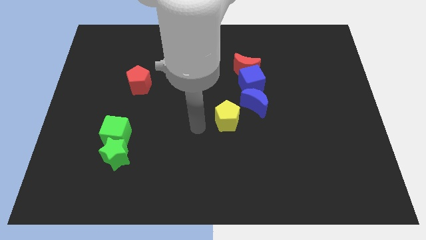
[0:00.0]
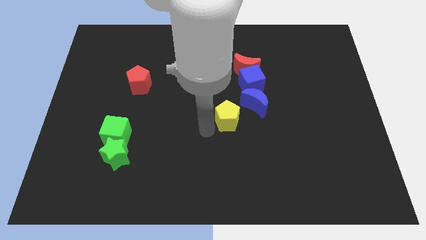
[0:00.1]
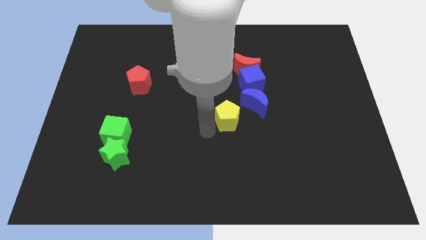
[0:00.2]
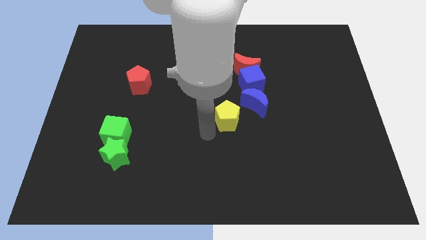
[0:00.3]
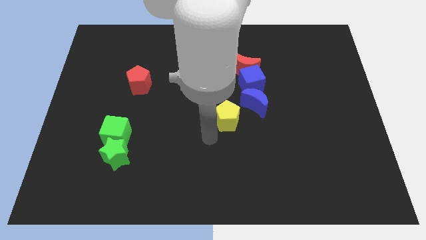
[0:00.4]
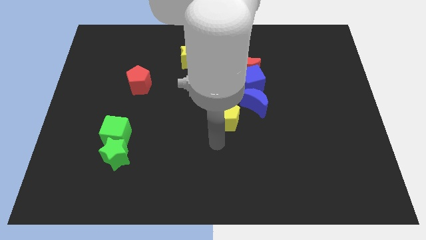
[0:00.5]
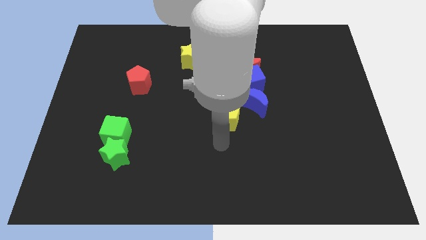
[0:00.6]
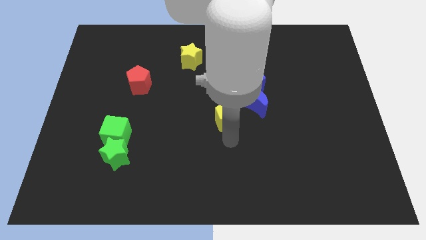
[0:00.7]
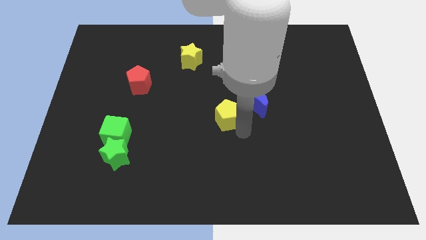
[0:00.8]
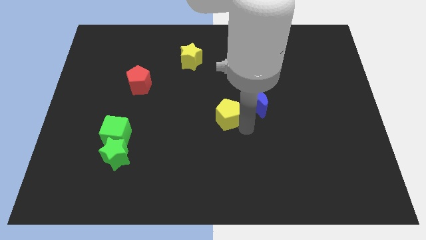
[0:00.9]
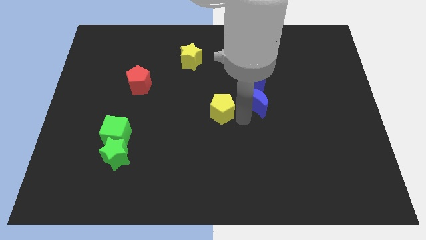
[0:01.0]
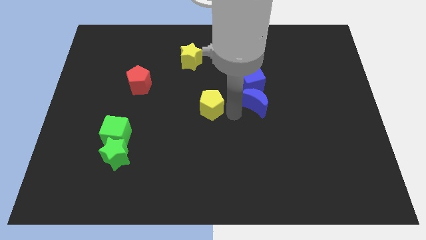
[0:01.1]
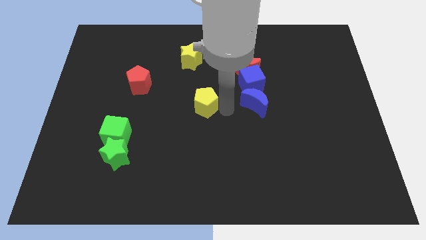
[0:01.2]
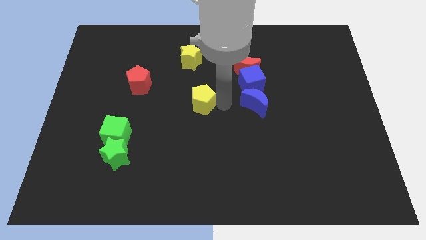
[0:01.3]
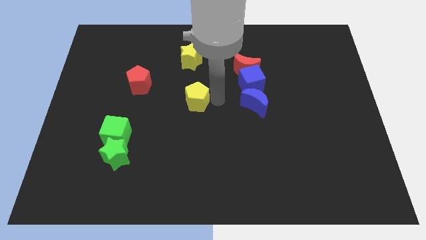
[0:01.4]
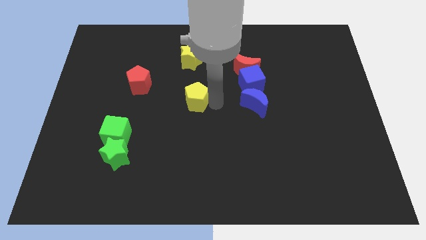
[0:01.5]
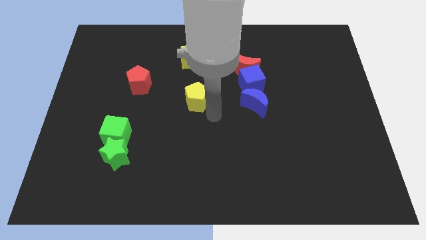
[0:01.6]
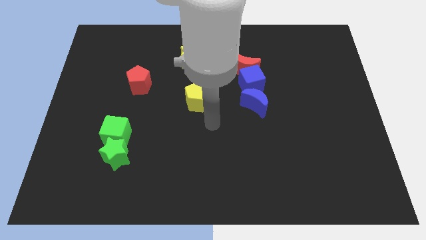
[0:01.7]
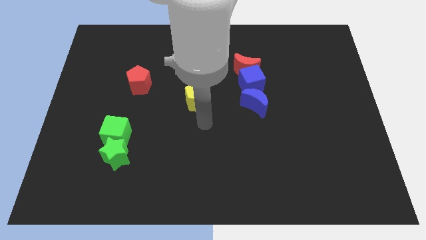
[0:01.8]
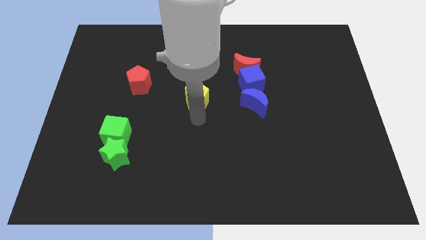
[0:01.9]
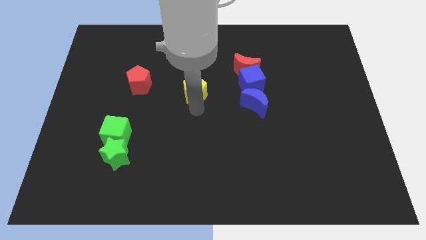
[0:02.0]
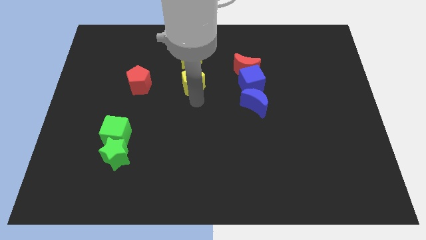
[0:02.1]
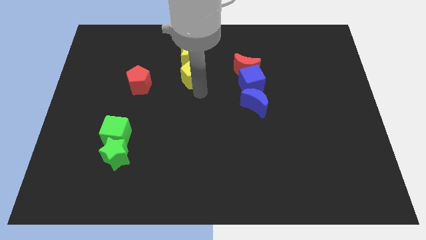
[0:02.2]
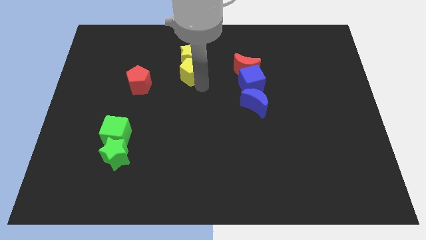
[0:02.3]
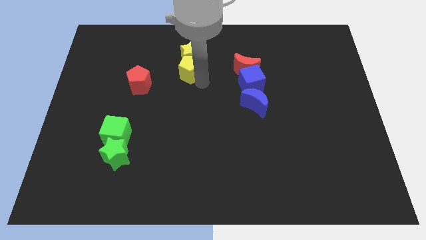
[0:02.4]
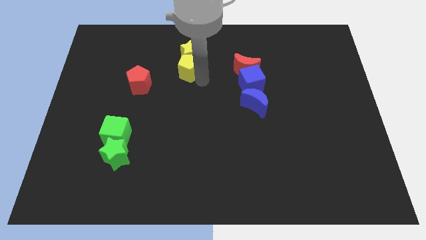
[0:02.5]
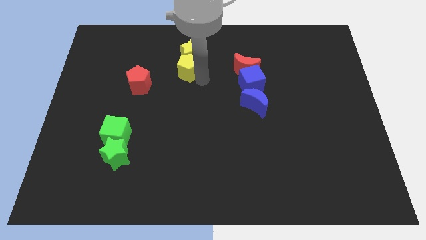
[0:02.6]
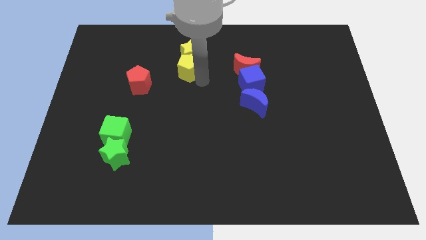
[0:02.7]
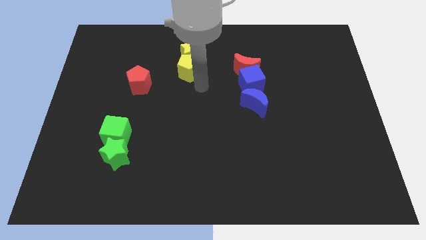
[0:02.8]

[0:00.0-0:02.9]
move yellow pentagon into the bottom of yellow star

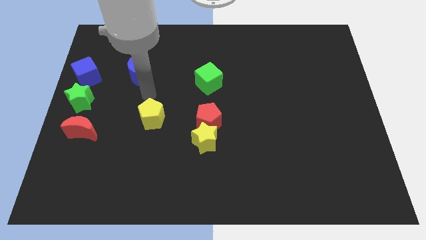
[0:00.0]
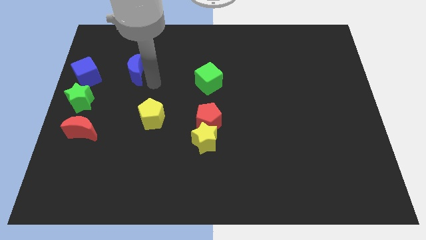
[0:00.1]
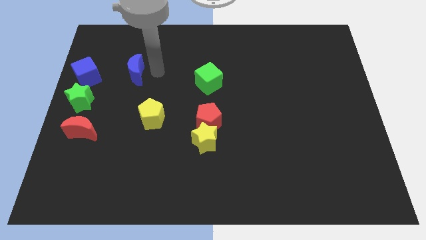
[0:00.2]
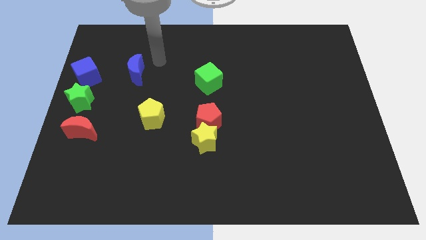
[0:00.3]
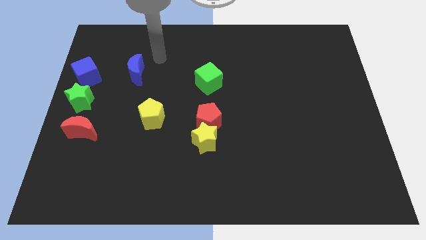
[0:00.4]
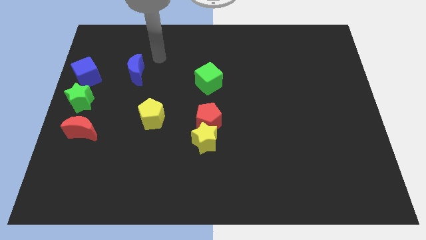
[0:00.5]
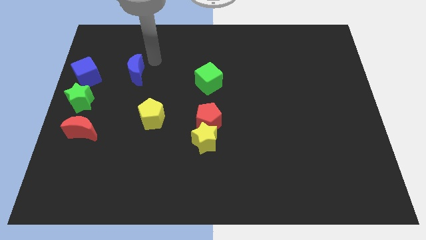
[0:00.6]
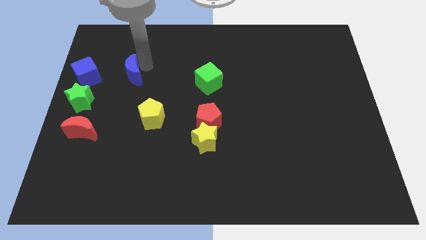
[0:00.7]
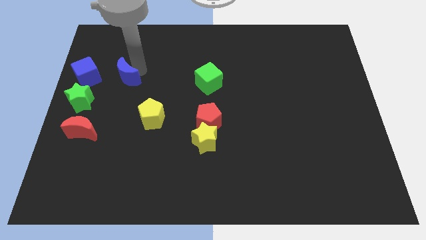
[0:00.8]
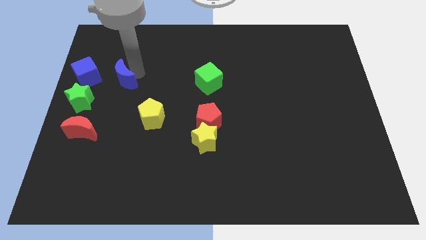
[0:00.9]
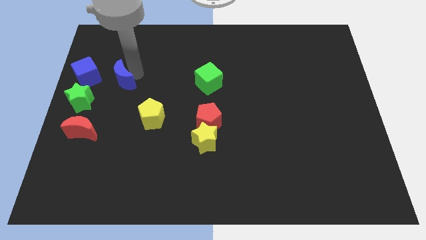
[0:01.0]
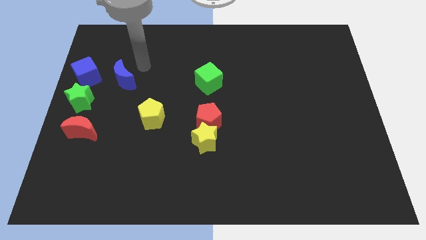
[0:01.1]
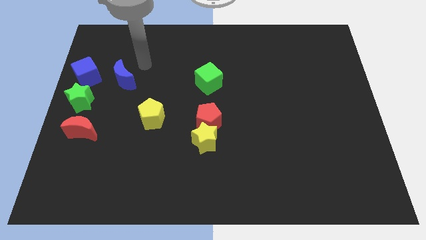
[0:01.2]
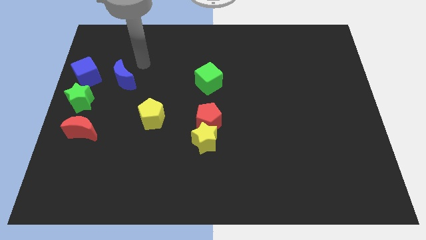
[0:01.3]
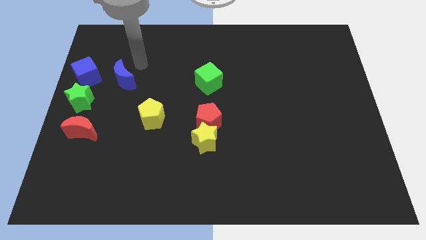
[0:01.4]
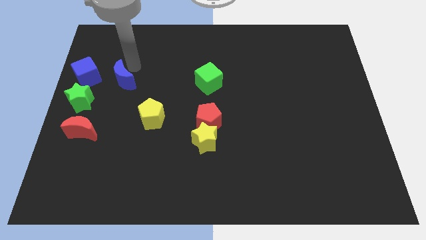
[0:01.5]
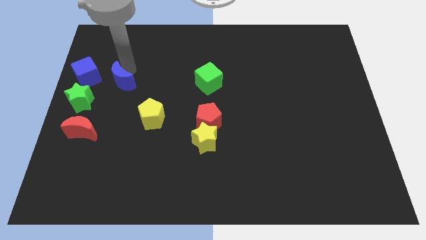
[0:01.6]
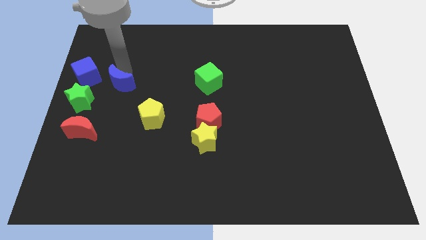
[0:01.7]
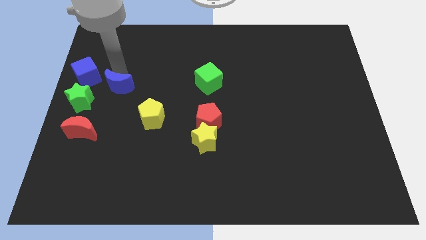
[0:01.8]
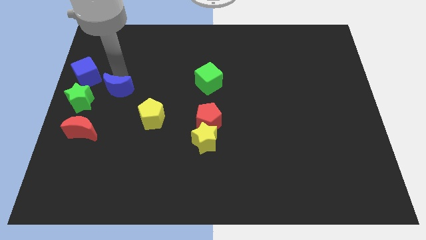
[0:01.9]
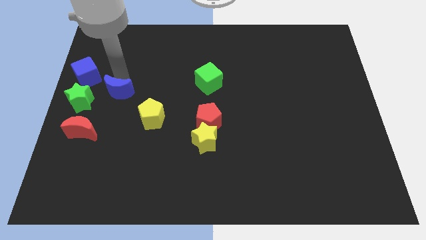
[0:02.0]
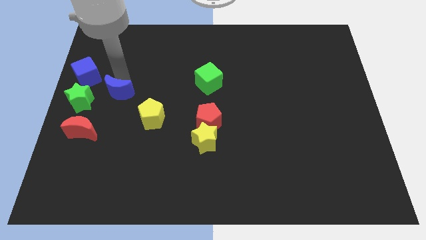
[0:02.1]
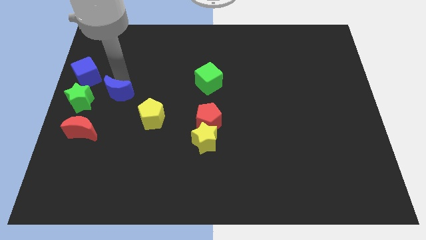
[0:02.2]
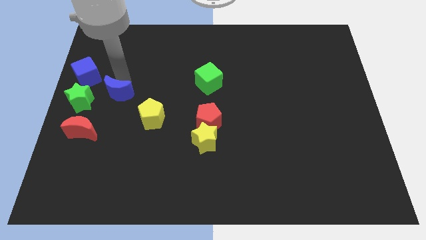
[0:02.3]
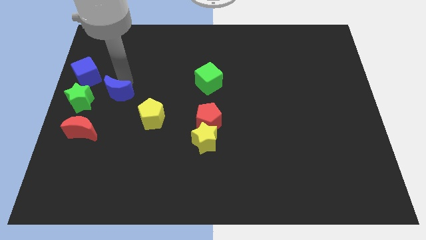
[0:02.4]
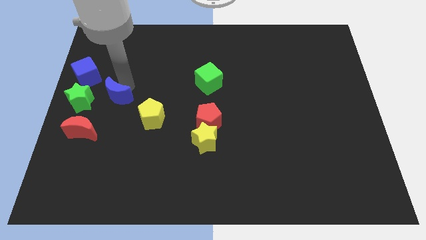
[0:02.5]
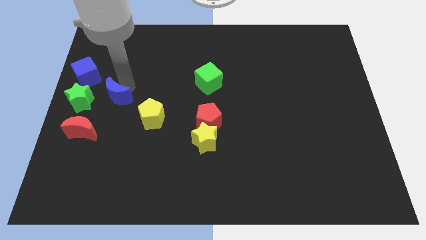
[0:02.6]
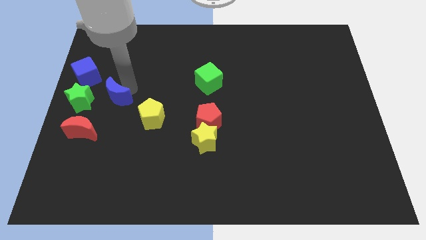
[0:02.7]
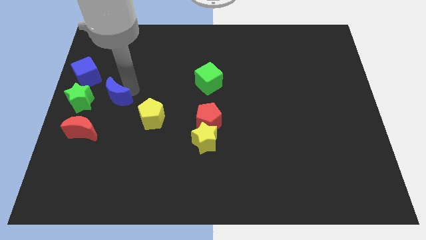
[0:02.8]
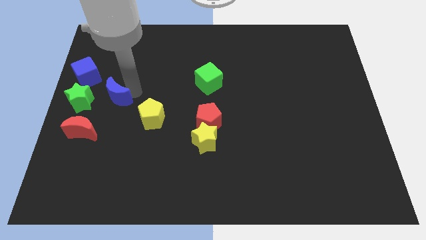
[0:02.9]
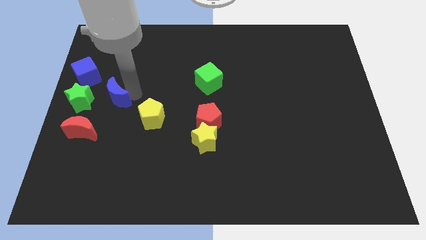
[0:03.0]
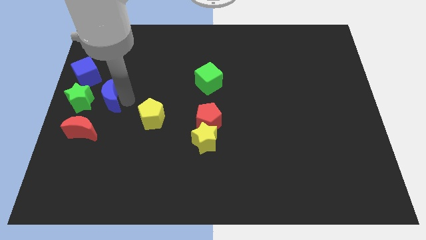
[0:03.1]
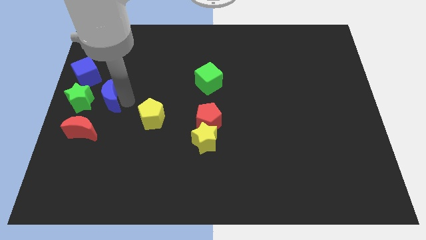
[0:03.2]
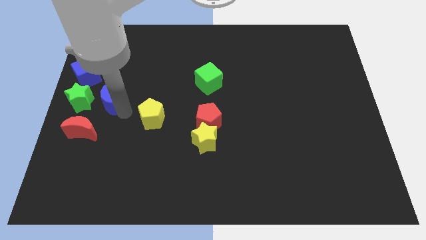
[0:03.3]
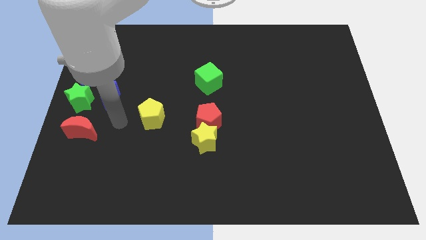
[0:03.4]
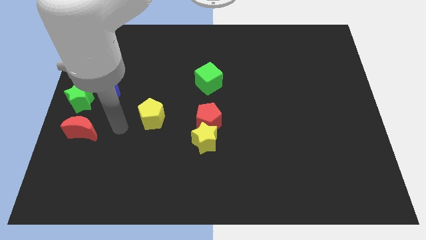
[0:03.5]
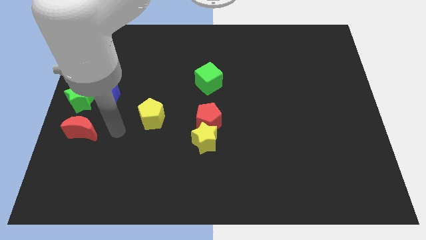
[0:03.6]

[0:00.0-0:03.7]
place the blue crescent at right side of the green star

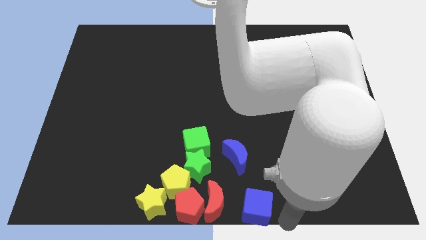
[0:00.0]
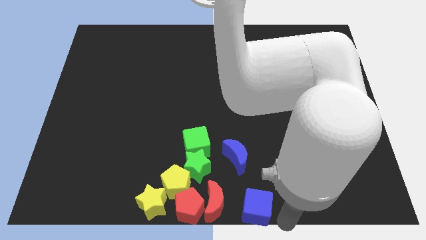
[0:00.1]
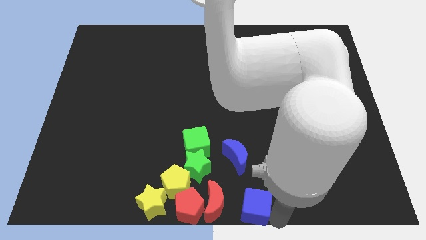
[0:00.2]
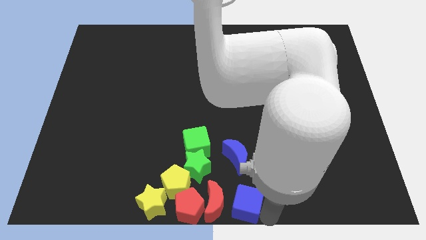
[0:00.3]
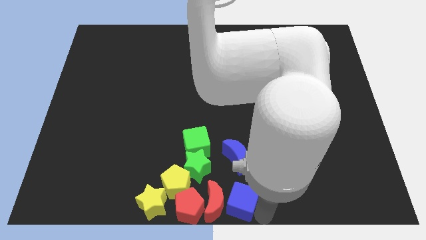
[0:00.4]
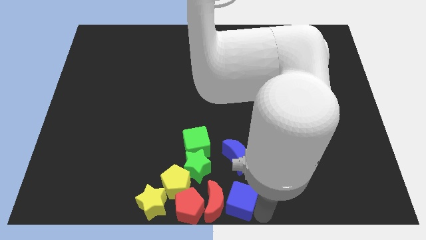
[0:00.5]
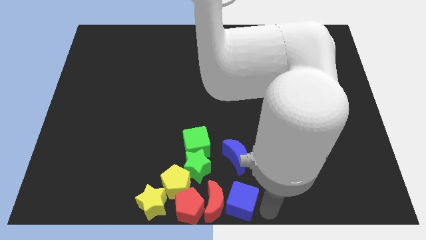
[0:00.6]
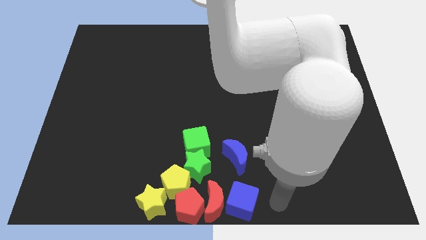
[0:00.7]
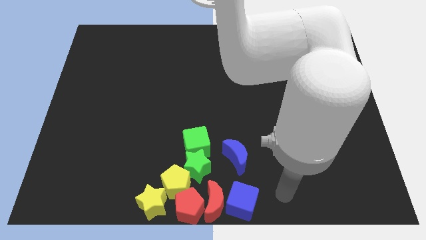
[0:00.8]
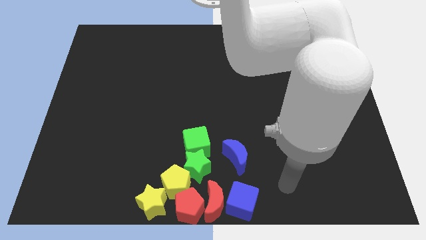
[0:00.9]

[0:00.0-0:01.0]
move the blue cube close to the red crescent

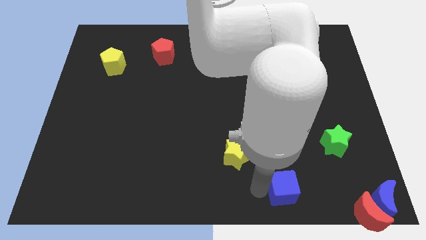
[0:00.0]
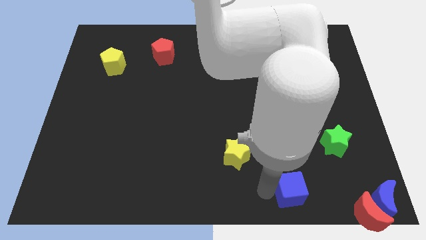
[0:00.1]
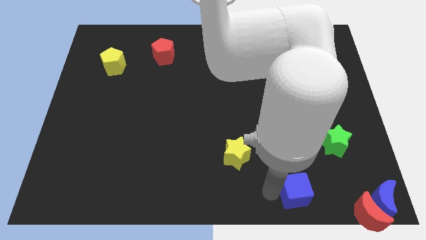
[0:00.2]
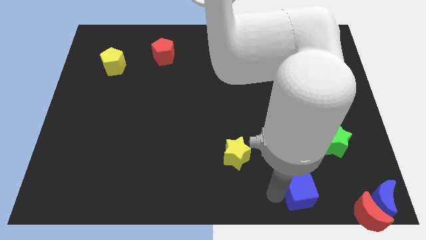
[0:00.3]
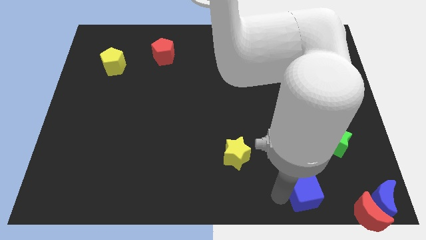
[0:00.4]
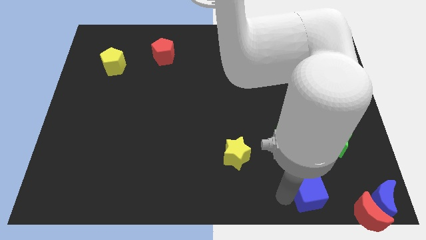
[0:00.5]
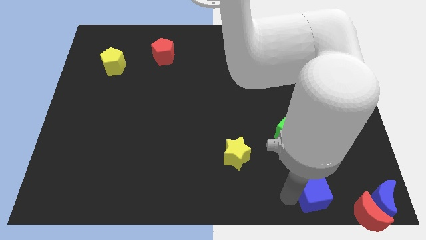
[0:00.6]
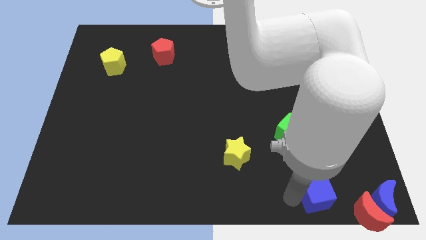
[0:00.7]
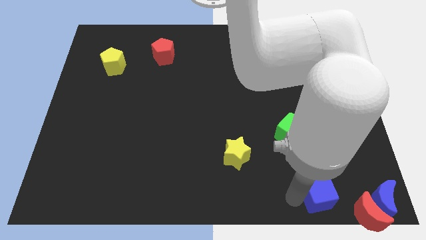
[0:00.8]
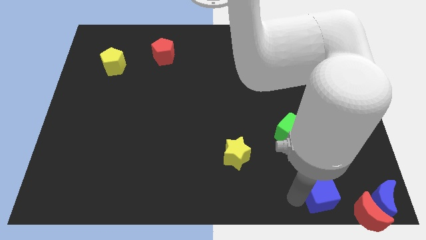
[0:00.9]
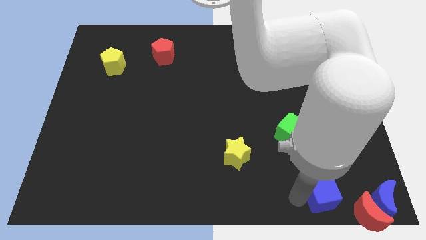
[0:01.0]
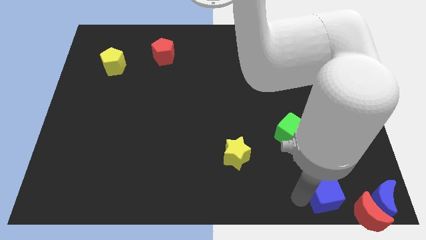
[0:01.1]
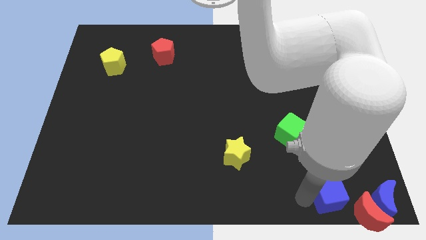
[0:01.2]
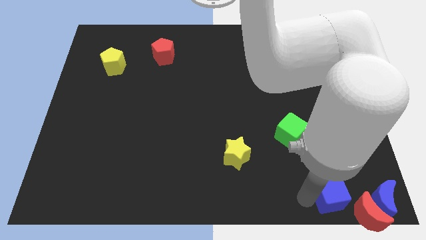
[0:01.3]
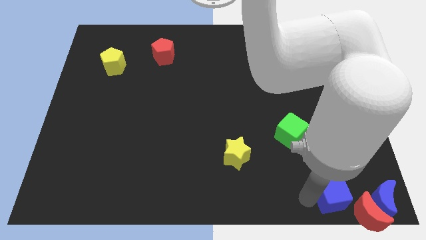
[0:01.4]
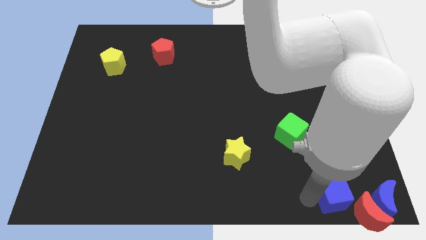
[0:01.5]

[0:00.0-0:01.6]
move the blue cube to the bottom of the green star
